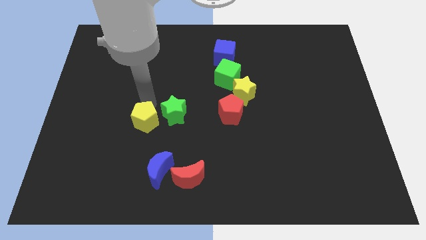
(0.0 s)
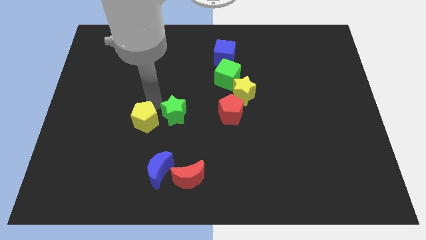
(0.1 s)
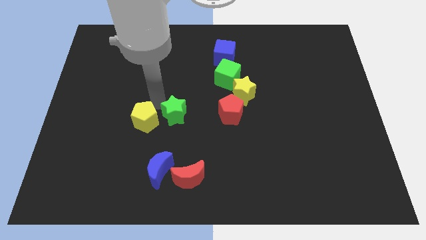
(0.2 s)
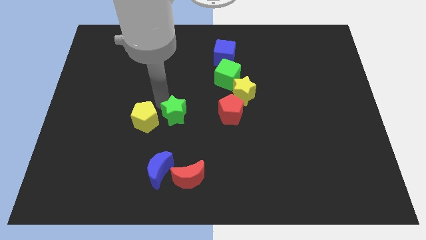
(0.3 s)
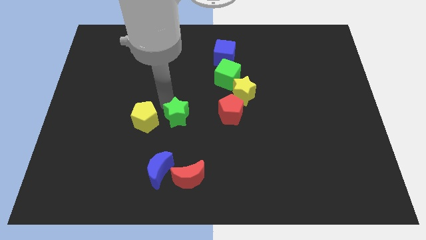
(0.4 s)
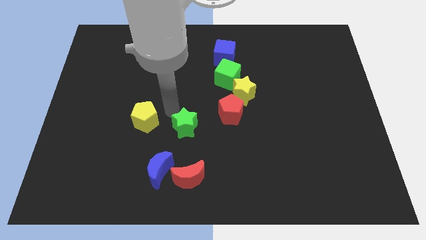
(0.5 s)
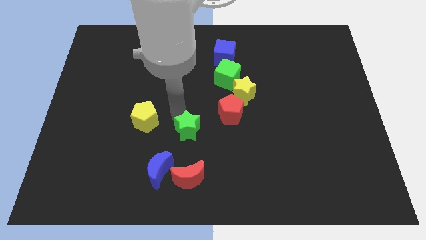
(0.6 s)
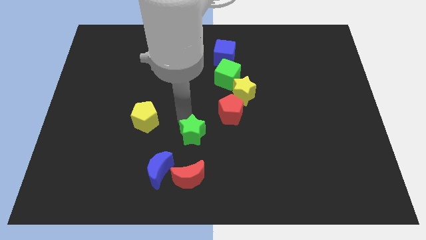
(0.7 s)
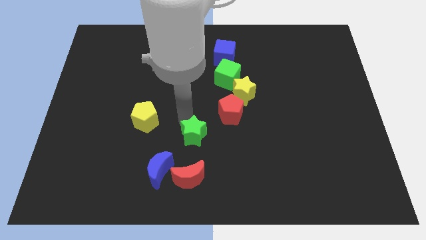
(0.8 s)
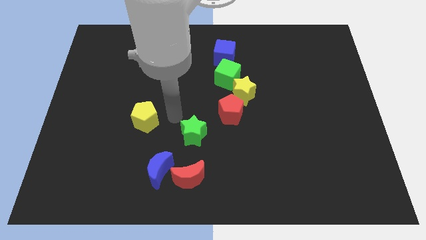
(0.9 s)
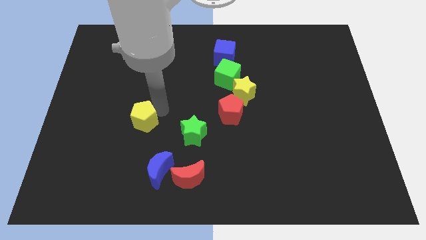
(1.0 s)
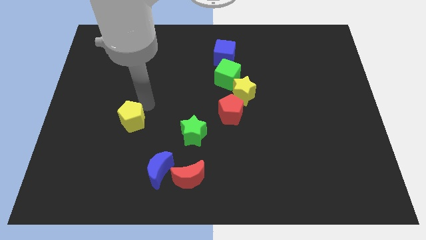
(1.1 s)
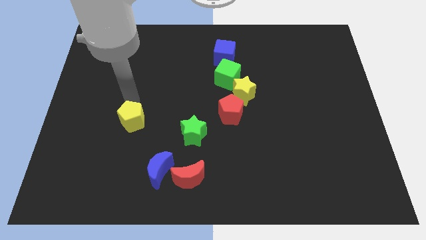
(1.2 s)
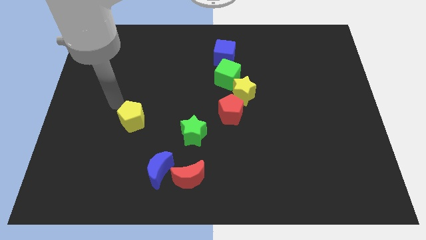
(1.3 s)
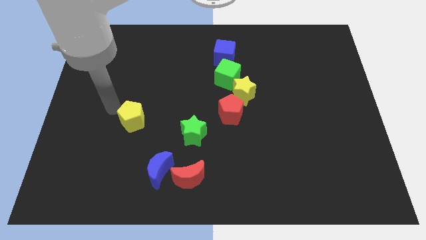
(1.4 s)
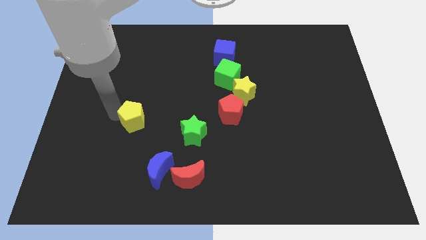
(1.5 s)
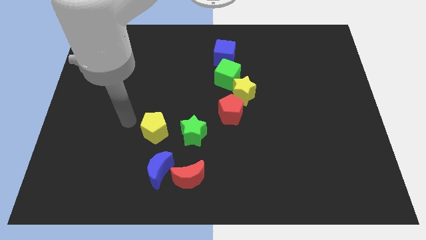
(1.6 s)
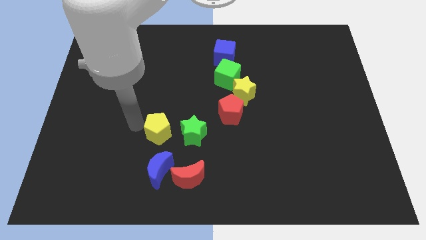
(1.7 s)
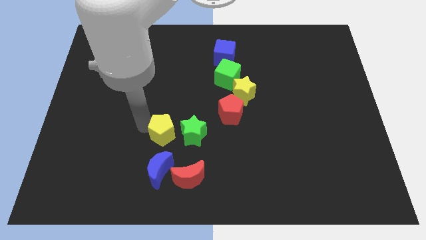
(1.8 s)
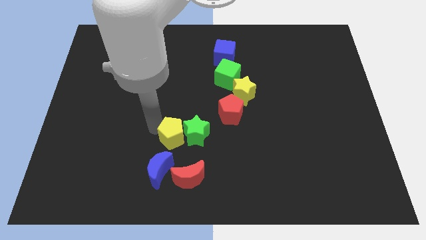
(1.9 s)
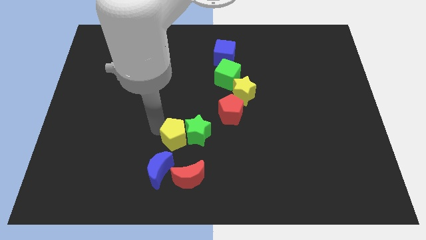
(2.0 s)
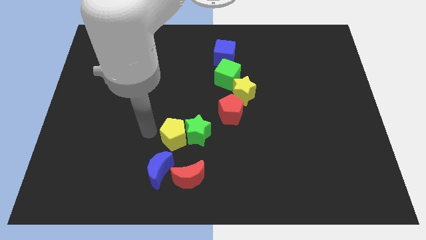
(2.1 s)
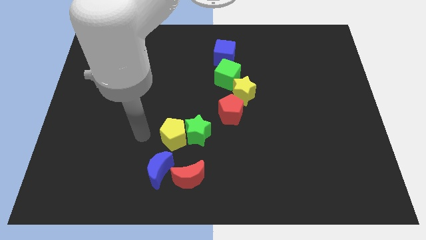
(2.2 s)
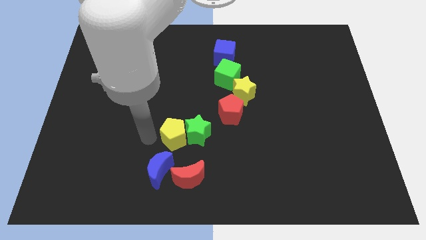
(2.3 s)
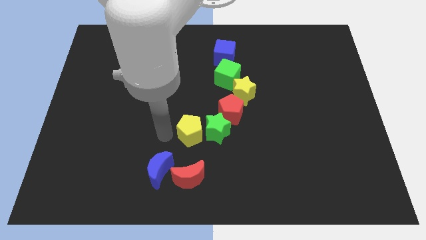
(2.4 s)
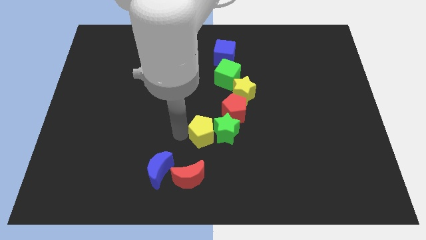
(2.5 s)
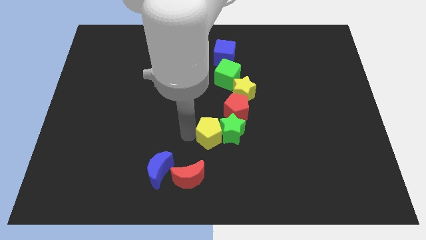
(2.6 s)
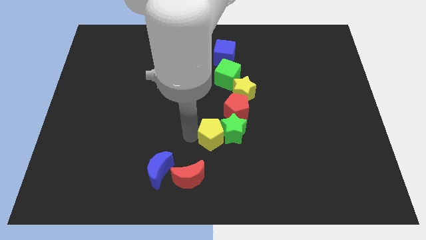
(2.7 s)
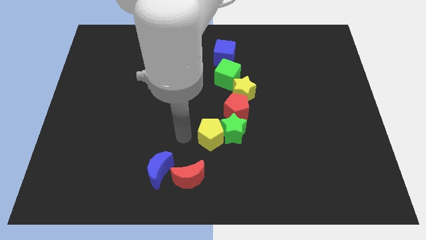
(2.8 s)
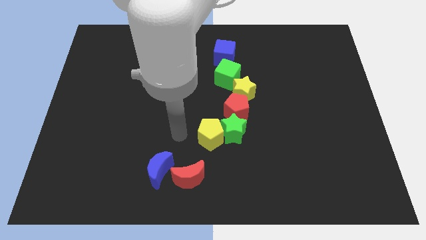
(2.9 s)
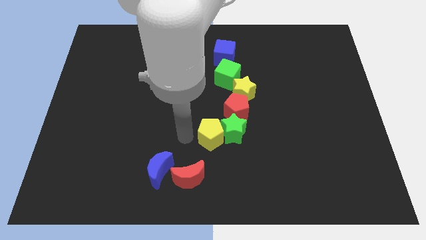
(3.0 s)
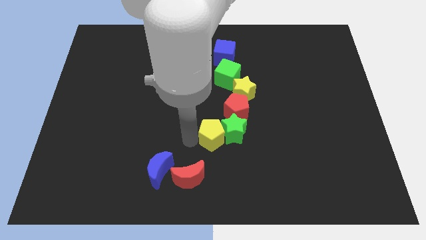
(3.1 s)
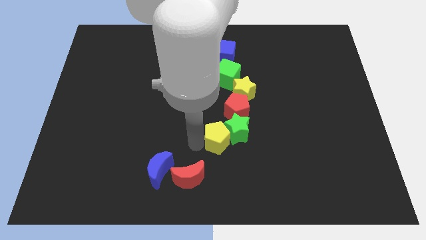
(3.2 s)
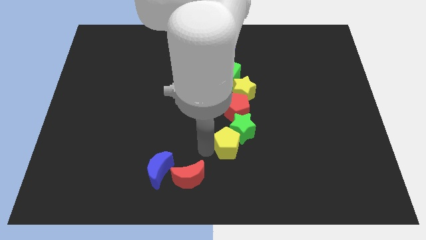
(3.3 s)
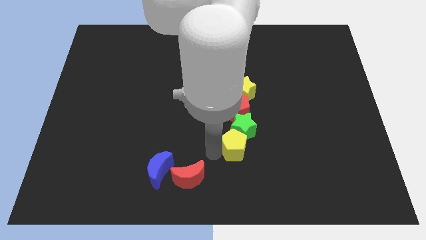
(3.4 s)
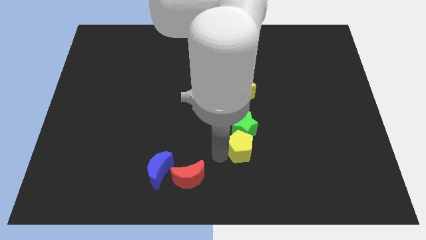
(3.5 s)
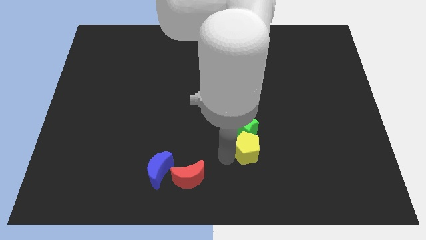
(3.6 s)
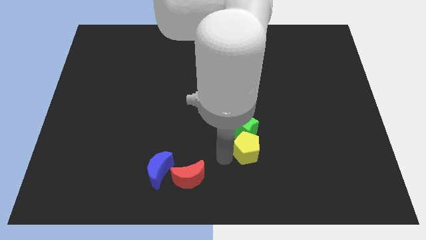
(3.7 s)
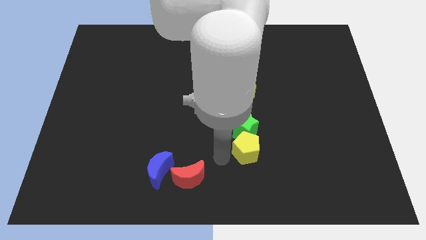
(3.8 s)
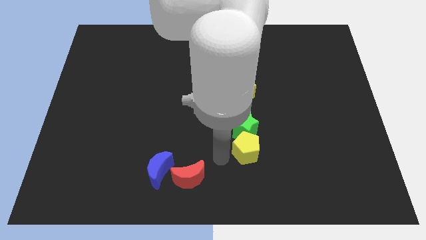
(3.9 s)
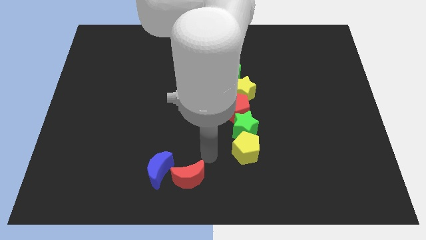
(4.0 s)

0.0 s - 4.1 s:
place the green star and yellow pentagon vertically to the bottom of the red pentagon

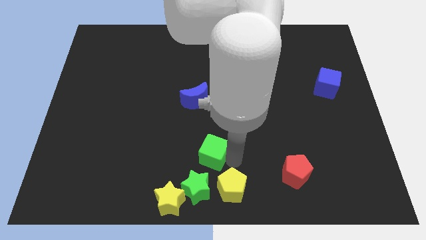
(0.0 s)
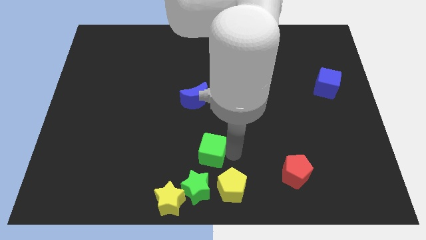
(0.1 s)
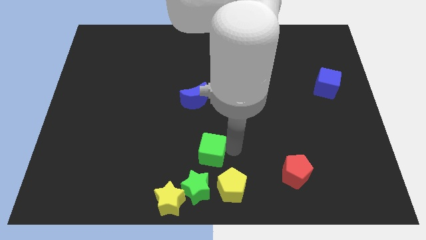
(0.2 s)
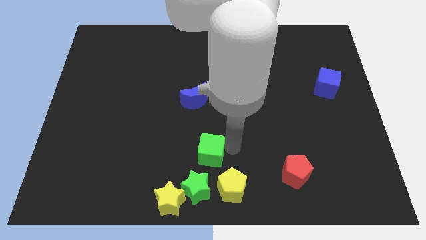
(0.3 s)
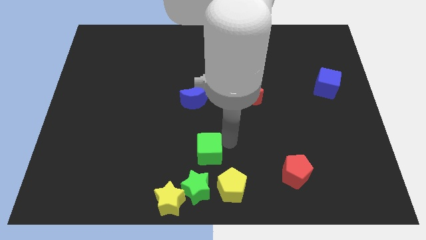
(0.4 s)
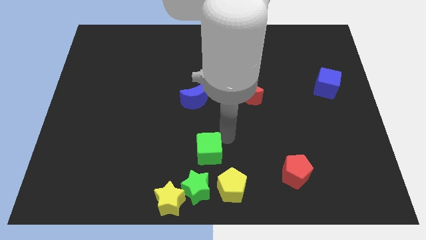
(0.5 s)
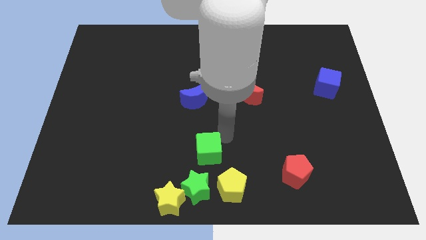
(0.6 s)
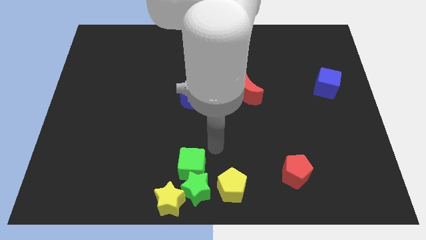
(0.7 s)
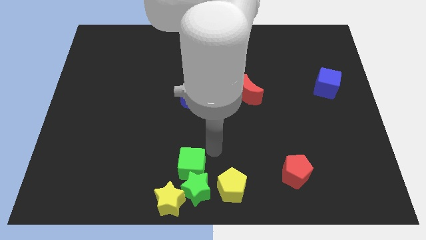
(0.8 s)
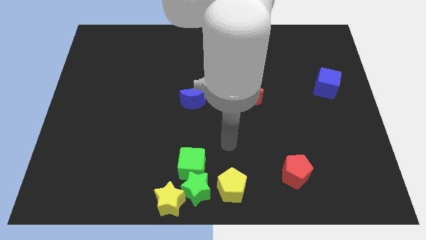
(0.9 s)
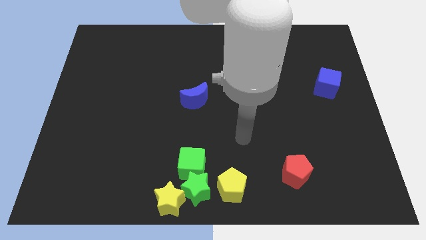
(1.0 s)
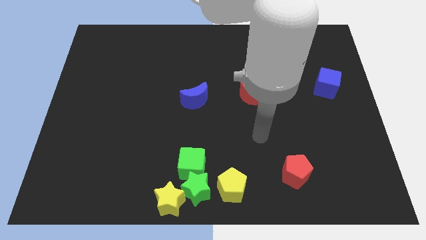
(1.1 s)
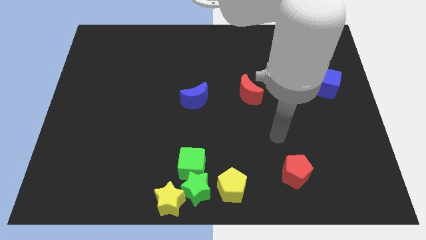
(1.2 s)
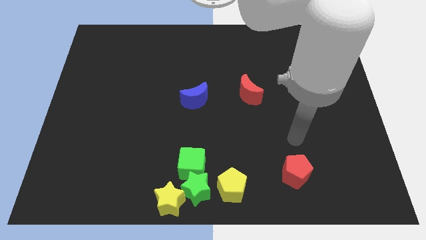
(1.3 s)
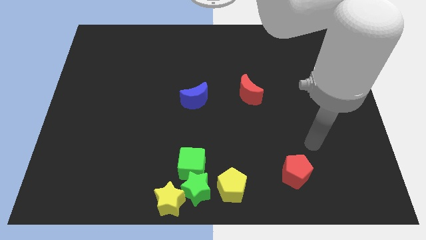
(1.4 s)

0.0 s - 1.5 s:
push the green cube towards the green star on the bottom left of the board

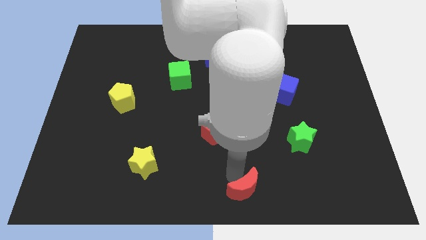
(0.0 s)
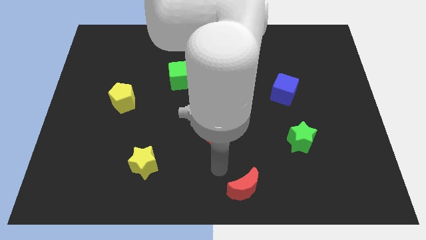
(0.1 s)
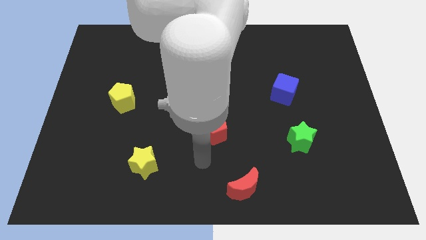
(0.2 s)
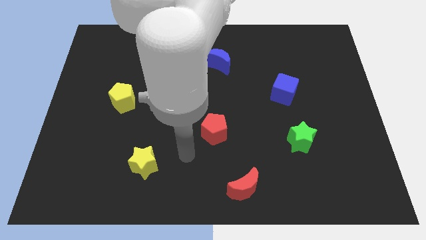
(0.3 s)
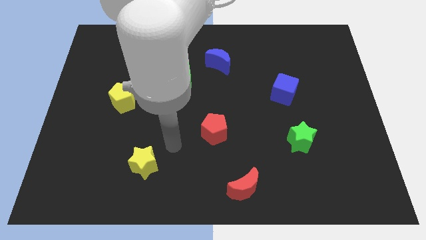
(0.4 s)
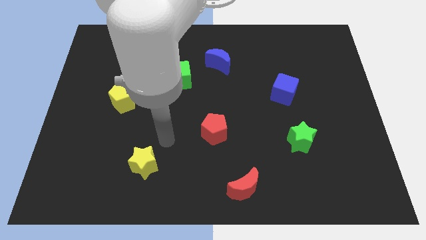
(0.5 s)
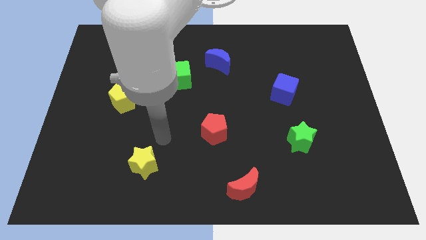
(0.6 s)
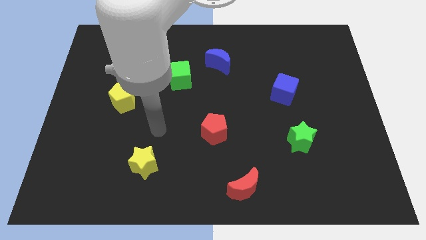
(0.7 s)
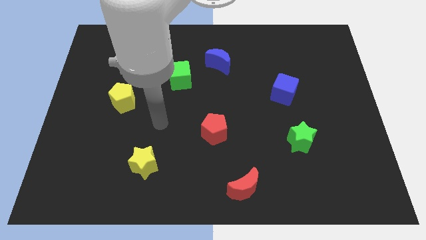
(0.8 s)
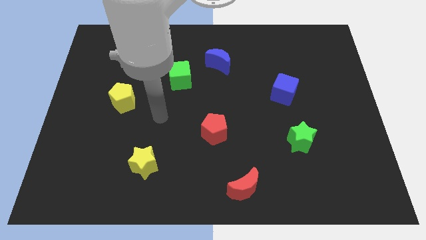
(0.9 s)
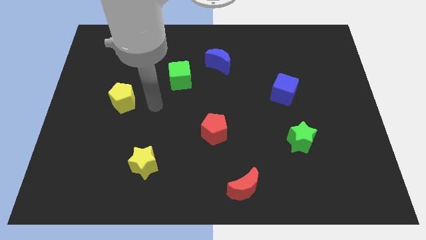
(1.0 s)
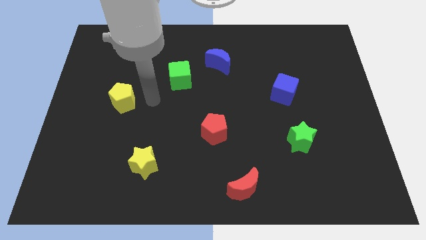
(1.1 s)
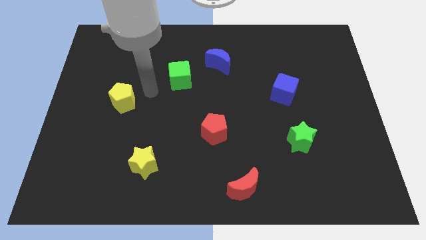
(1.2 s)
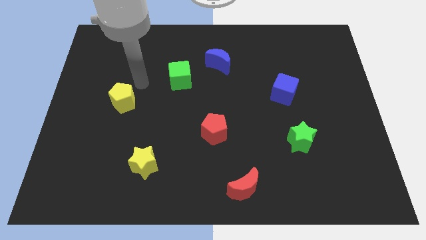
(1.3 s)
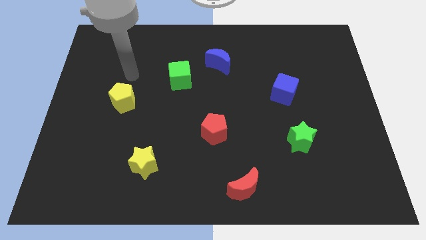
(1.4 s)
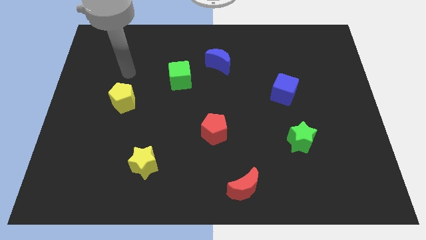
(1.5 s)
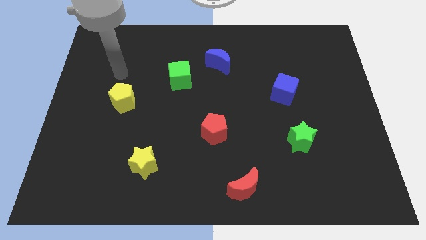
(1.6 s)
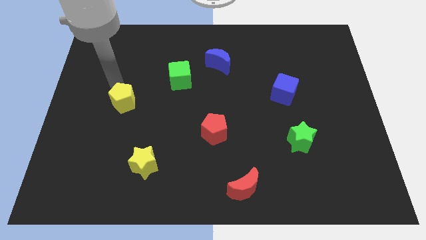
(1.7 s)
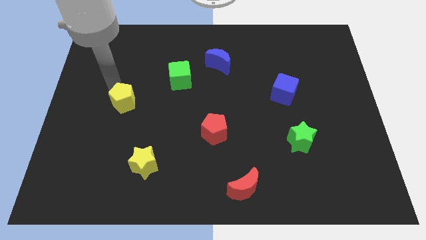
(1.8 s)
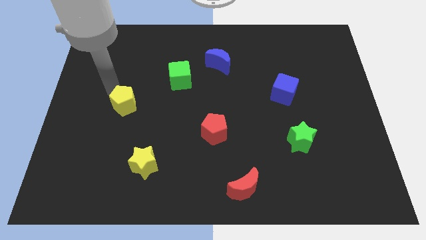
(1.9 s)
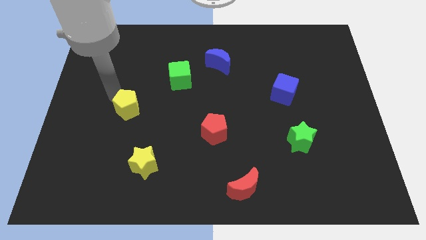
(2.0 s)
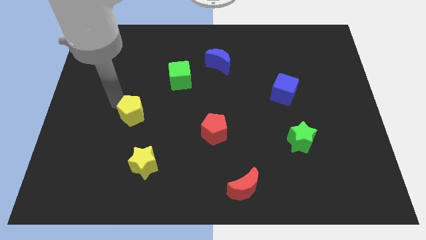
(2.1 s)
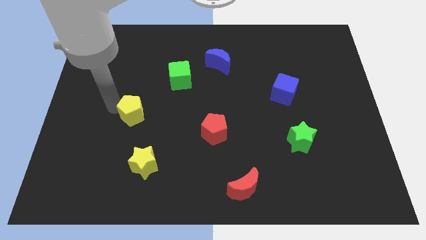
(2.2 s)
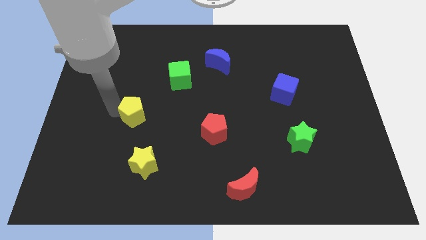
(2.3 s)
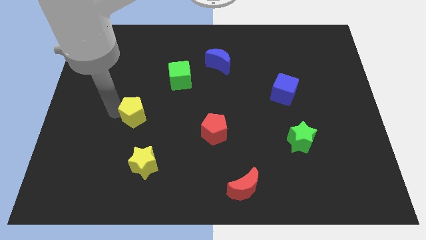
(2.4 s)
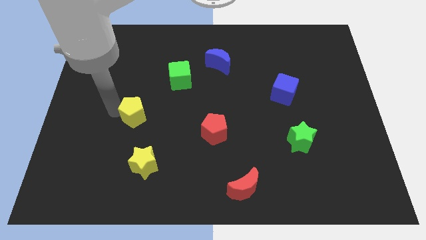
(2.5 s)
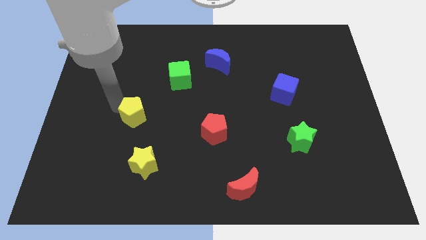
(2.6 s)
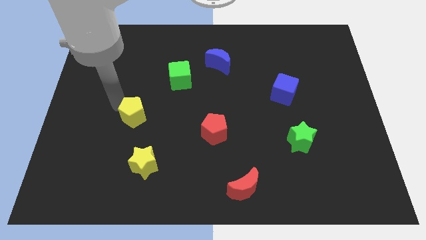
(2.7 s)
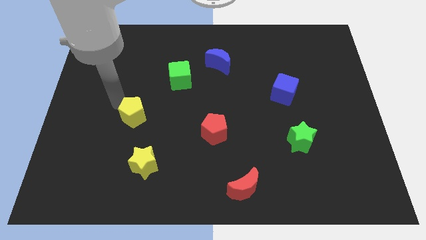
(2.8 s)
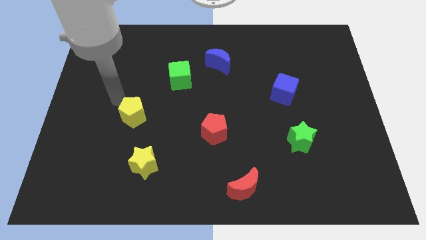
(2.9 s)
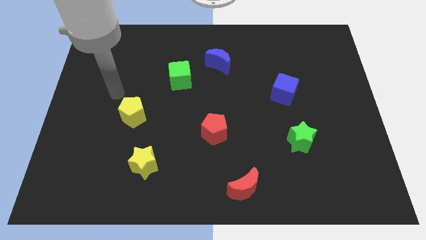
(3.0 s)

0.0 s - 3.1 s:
push yellow pentagon slightly towardsthe bottom of board

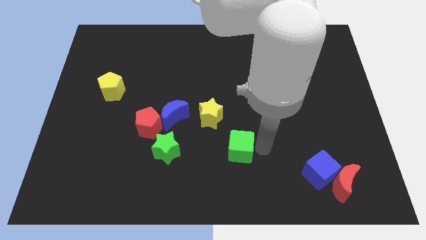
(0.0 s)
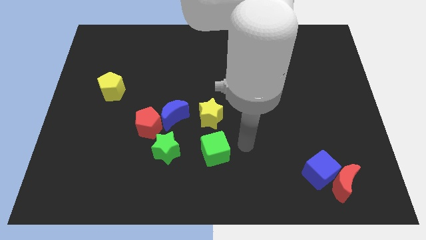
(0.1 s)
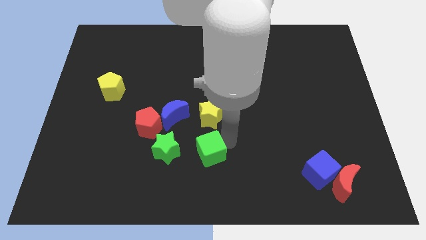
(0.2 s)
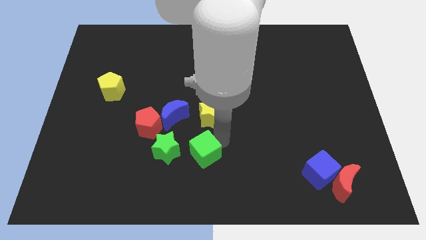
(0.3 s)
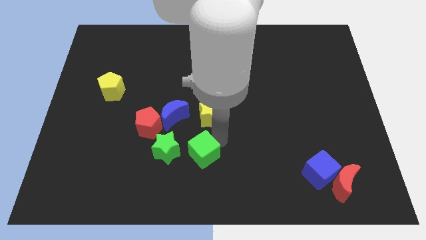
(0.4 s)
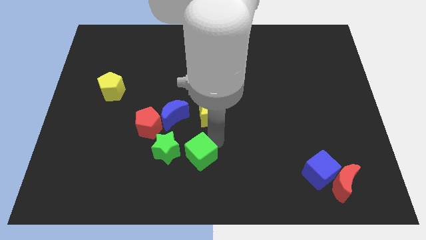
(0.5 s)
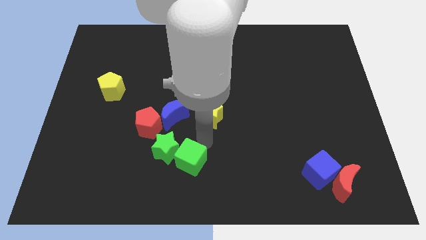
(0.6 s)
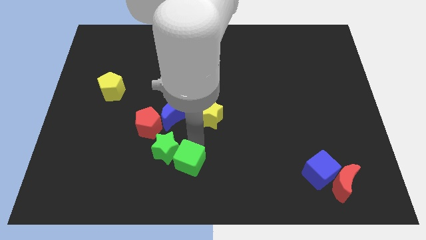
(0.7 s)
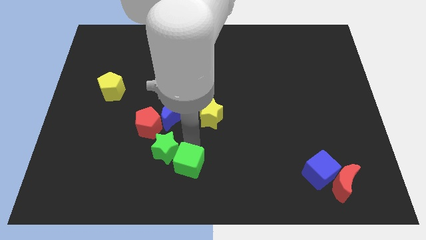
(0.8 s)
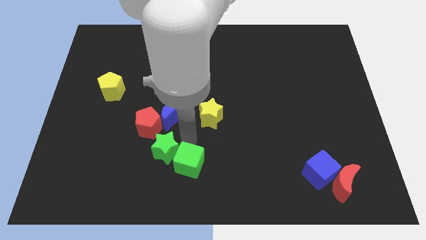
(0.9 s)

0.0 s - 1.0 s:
push green cube close to green star
